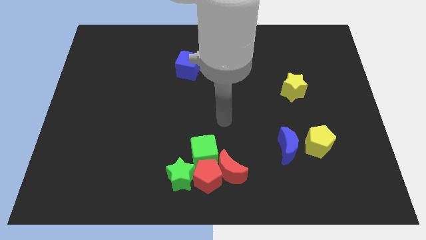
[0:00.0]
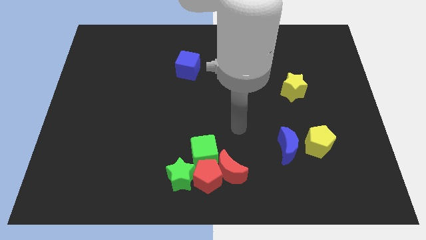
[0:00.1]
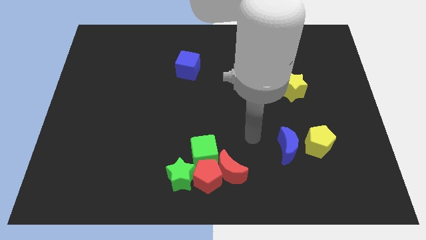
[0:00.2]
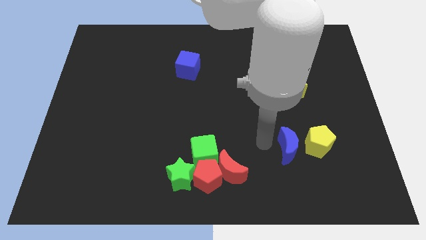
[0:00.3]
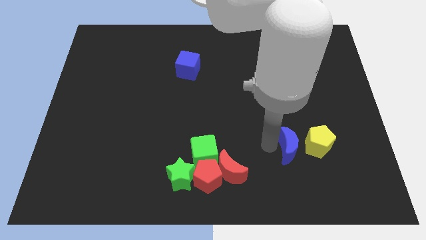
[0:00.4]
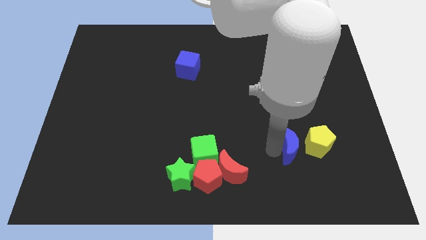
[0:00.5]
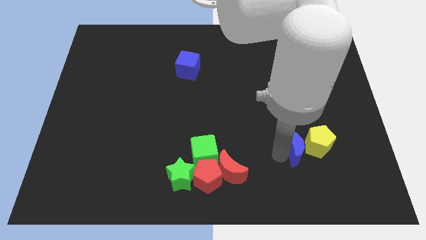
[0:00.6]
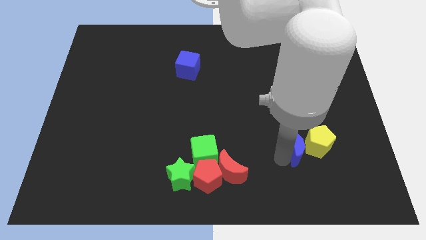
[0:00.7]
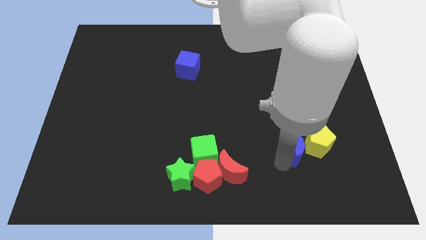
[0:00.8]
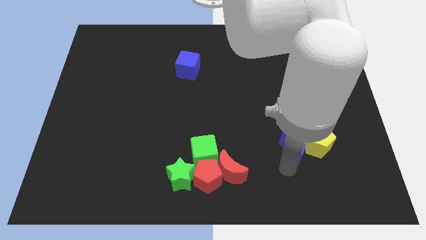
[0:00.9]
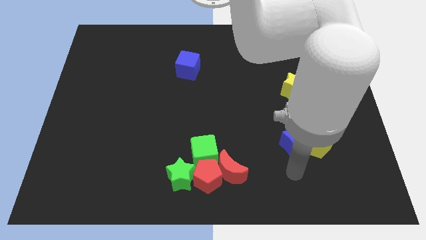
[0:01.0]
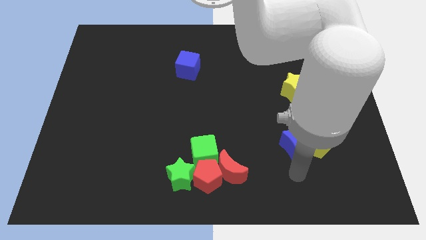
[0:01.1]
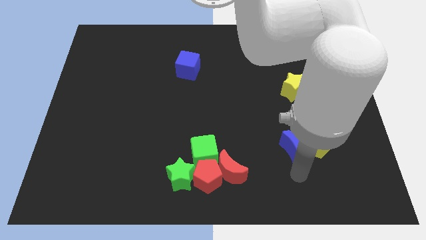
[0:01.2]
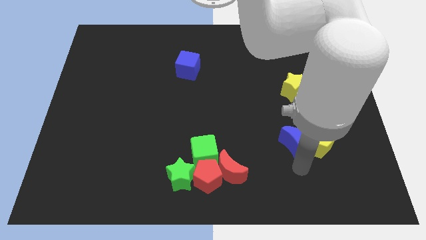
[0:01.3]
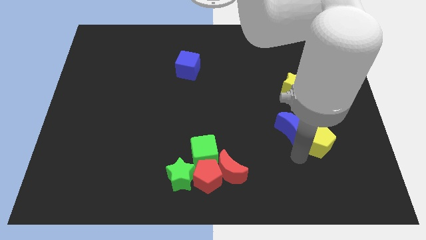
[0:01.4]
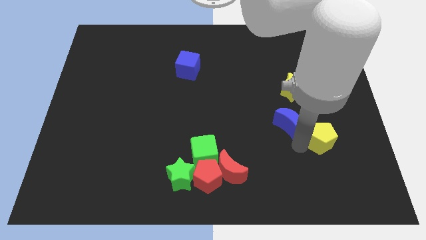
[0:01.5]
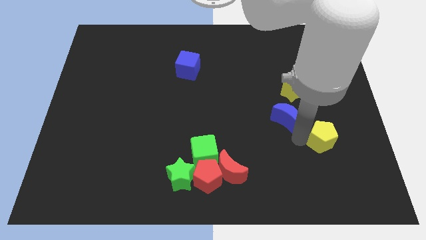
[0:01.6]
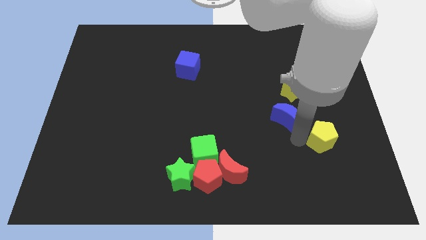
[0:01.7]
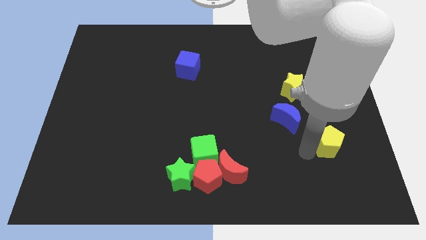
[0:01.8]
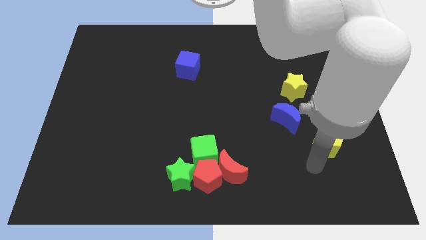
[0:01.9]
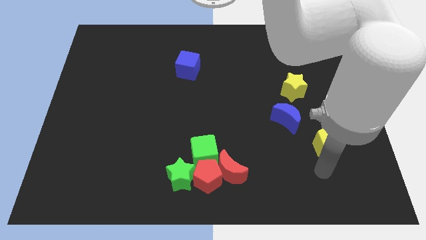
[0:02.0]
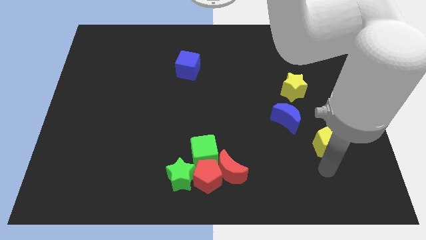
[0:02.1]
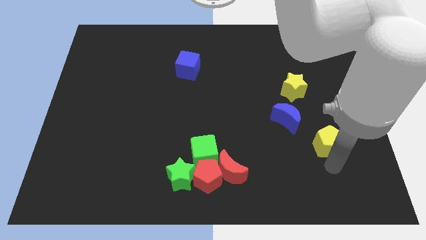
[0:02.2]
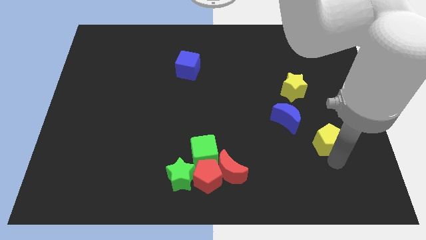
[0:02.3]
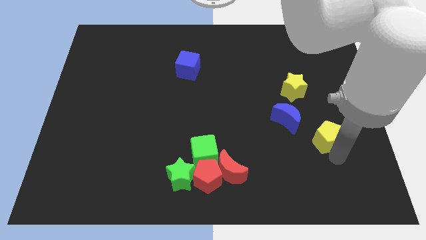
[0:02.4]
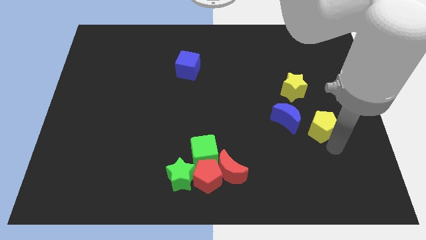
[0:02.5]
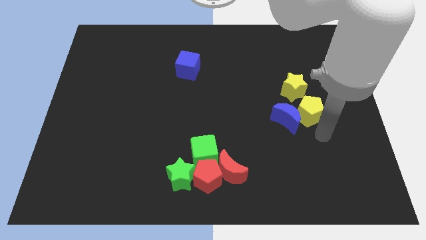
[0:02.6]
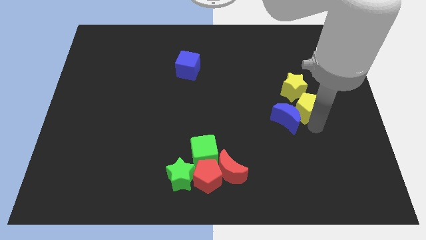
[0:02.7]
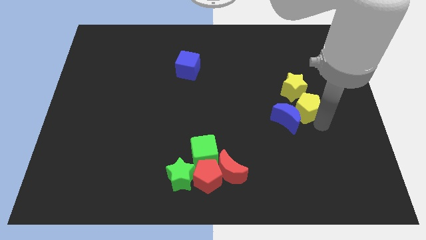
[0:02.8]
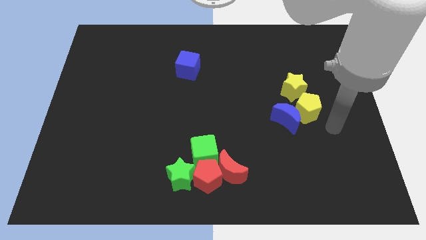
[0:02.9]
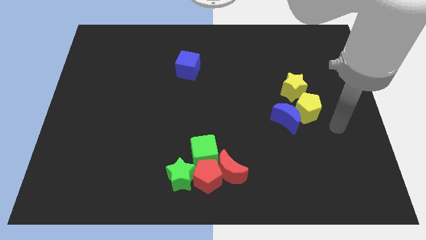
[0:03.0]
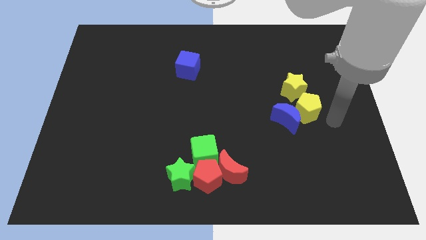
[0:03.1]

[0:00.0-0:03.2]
make a group of both yellow blocks and blue crescent at the top right side of the red crescent

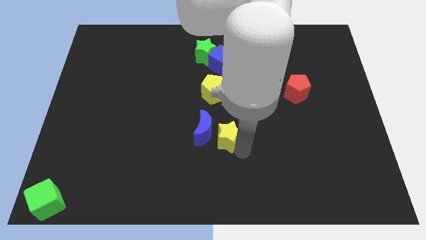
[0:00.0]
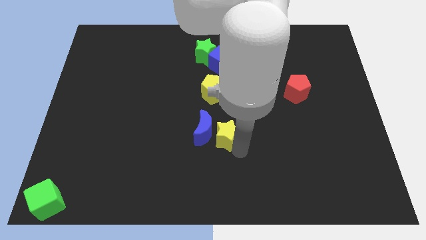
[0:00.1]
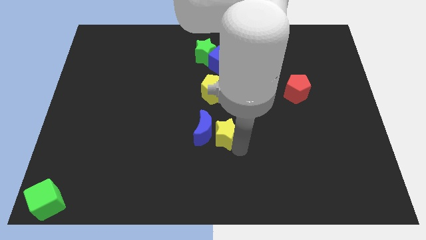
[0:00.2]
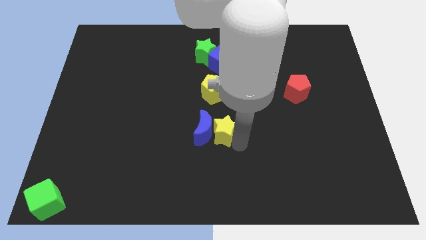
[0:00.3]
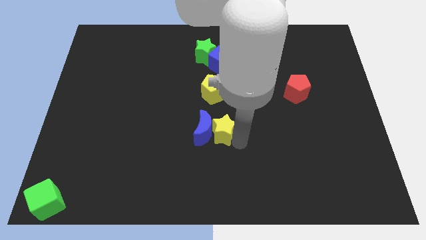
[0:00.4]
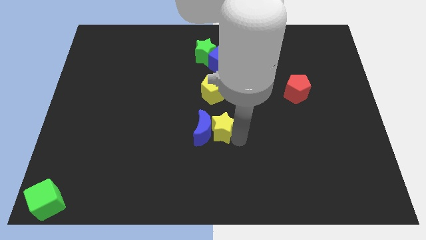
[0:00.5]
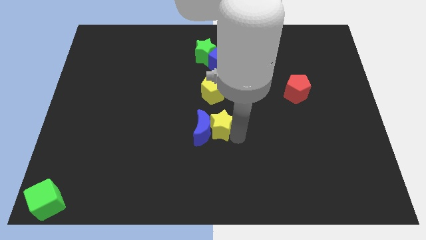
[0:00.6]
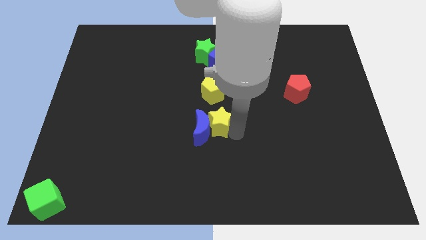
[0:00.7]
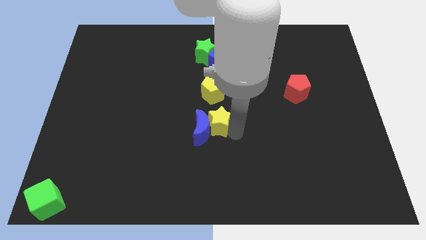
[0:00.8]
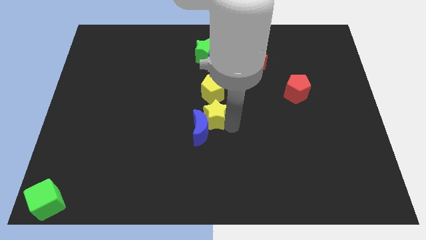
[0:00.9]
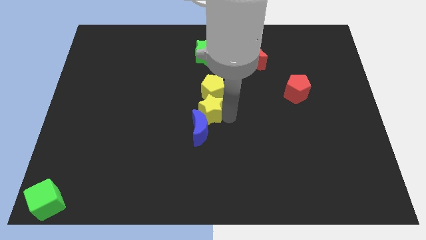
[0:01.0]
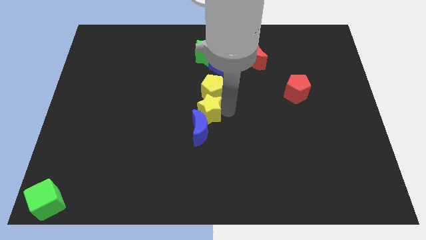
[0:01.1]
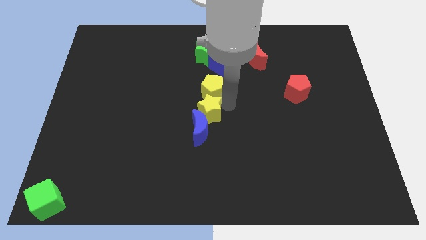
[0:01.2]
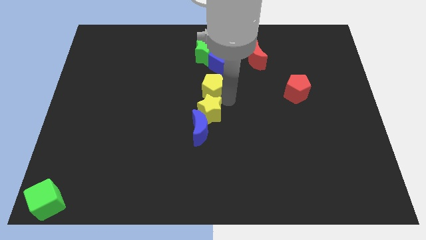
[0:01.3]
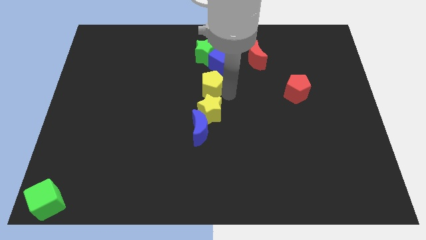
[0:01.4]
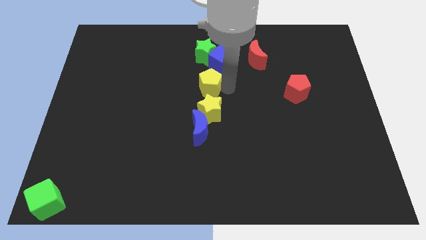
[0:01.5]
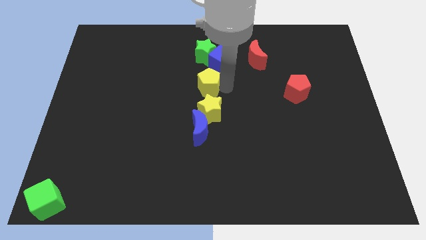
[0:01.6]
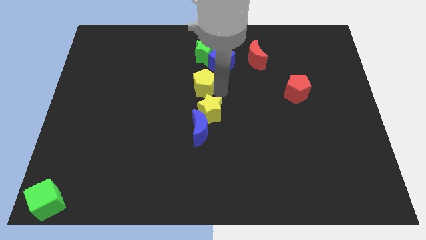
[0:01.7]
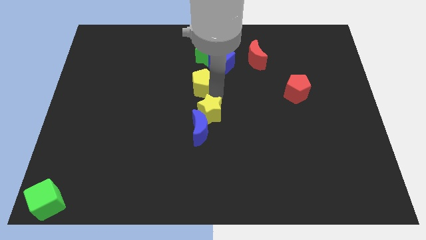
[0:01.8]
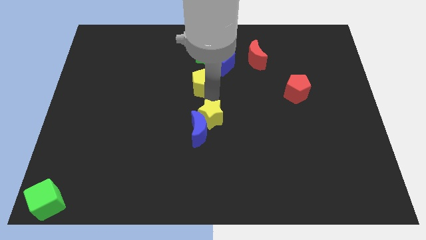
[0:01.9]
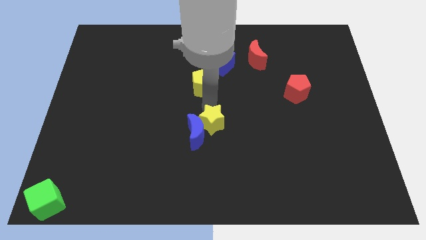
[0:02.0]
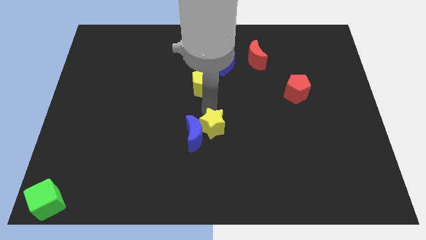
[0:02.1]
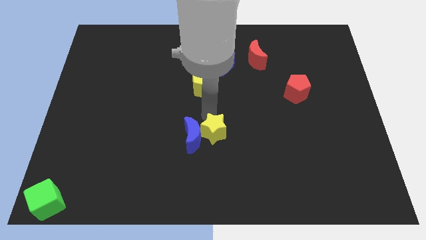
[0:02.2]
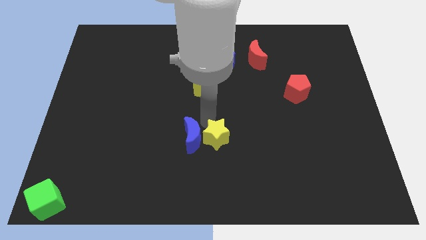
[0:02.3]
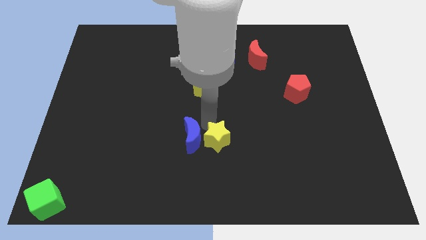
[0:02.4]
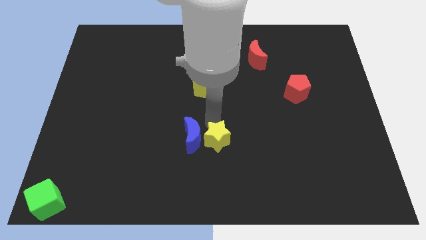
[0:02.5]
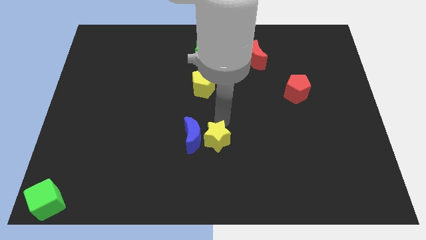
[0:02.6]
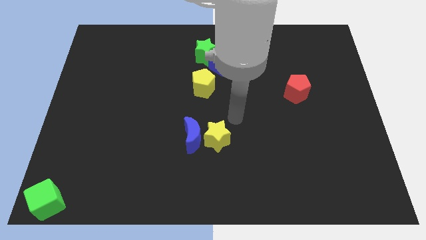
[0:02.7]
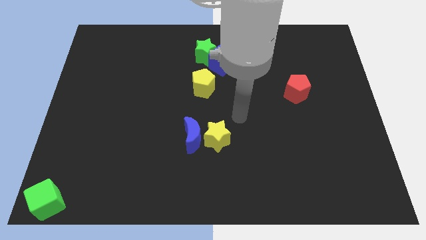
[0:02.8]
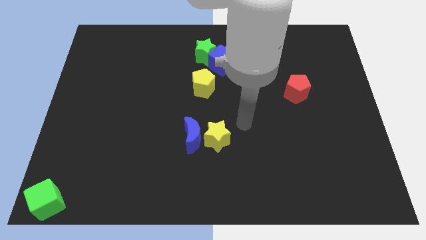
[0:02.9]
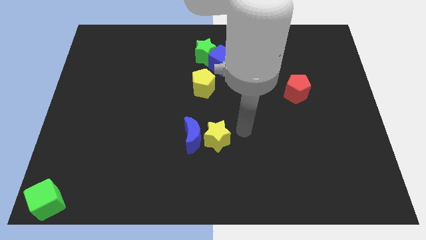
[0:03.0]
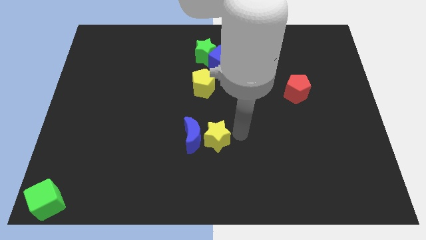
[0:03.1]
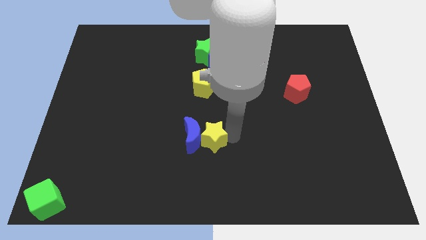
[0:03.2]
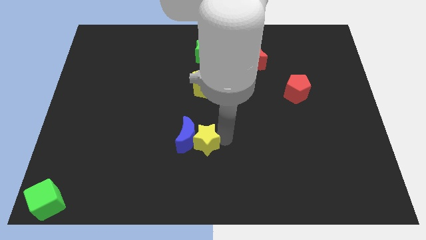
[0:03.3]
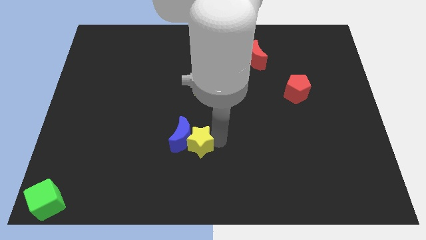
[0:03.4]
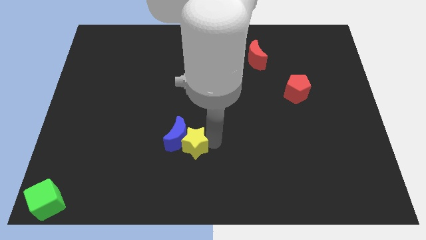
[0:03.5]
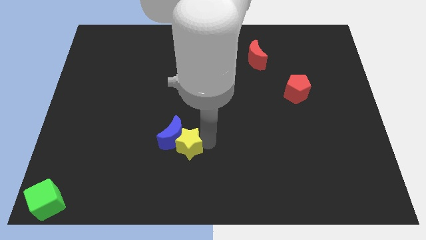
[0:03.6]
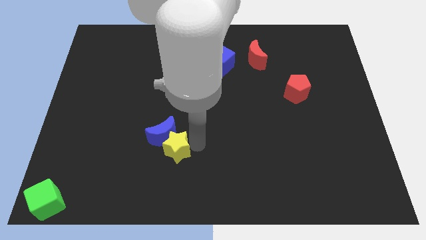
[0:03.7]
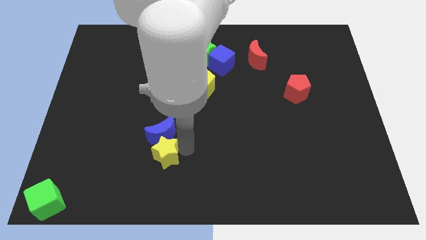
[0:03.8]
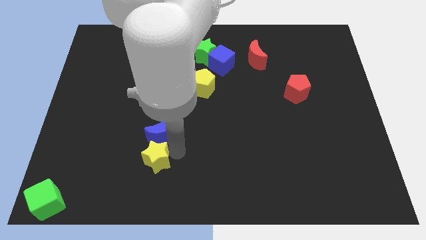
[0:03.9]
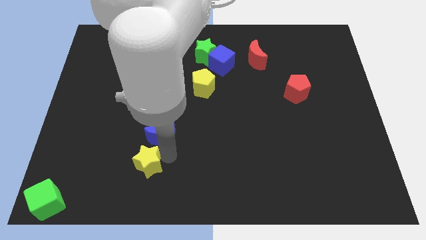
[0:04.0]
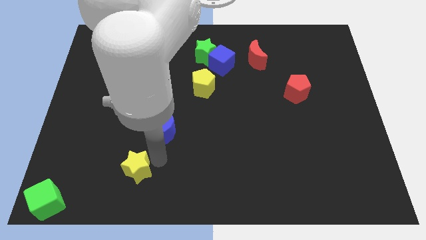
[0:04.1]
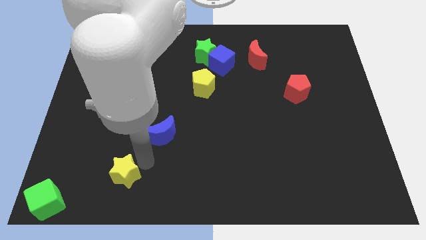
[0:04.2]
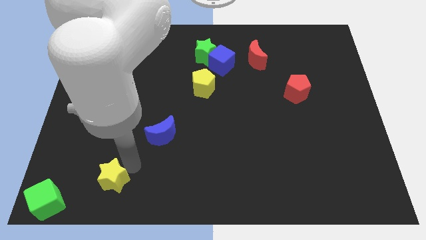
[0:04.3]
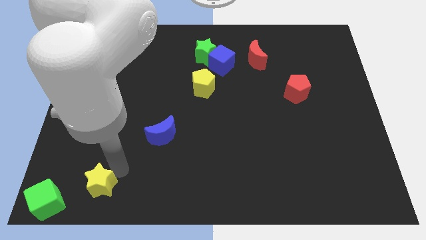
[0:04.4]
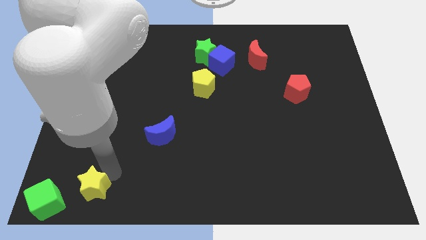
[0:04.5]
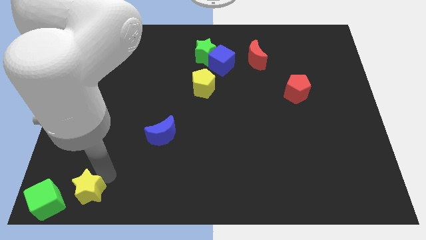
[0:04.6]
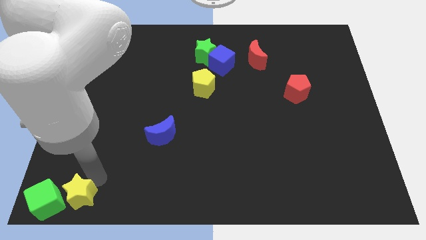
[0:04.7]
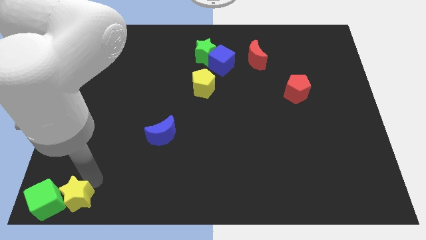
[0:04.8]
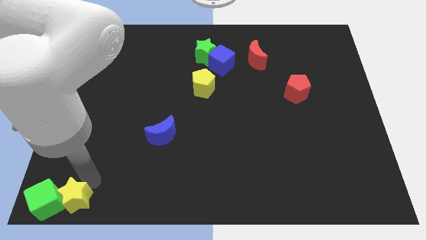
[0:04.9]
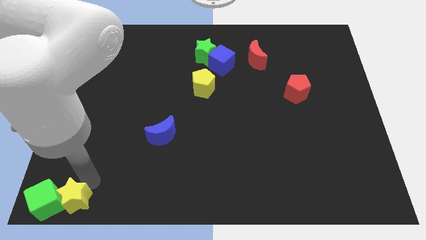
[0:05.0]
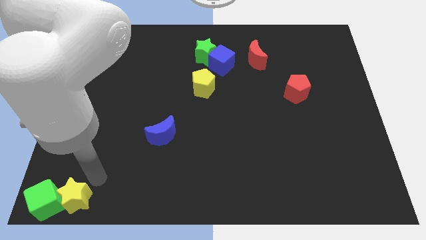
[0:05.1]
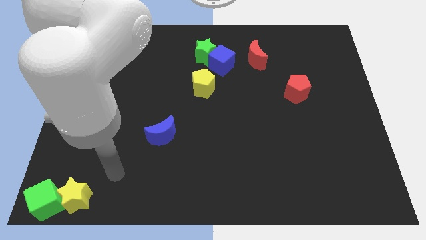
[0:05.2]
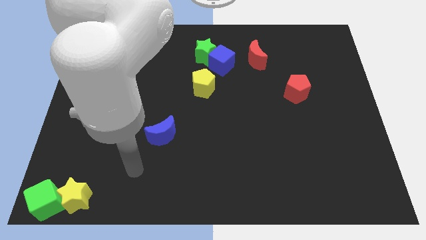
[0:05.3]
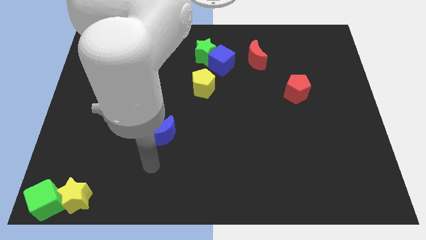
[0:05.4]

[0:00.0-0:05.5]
slide the yellow star to the bottom left corner

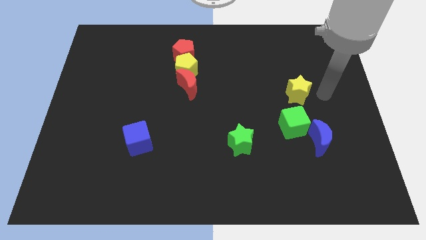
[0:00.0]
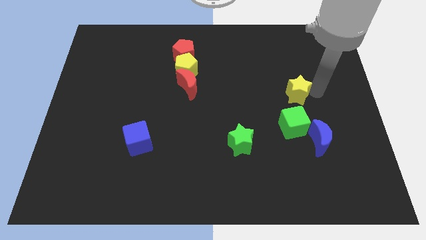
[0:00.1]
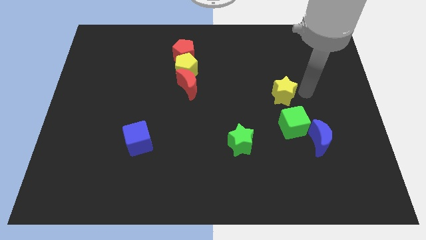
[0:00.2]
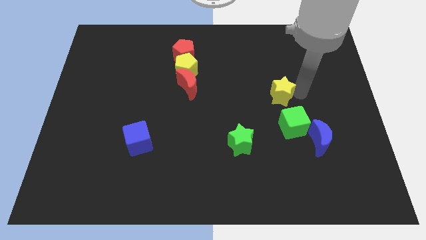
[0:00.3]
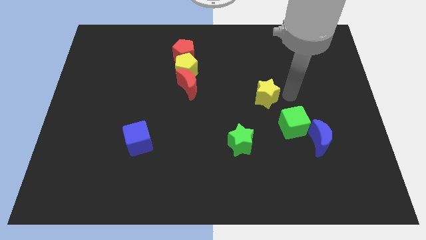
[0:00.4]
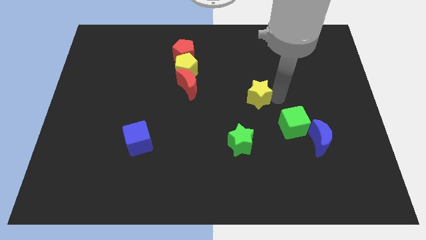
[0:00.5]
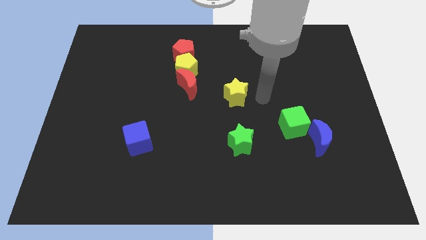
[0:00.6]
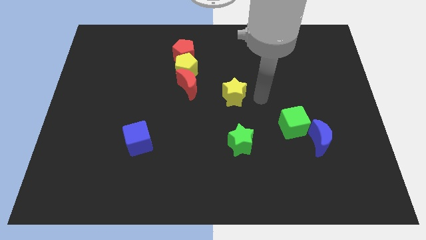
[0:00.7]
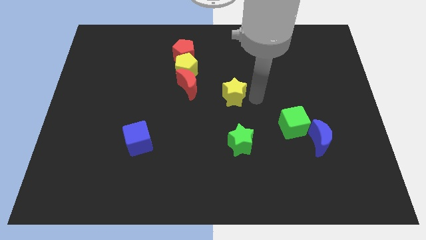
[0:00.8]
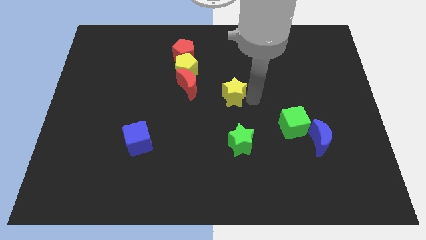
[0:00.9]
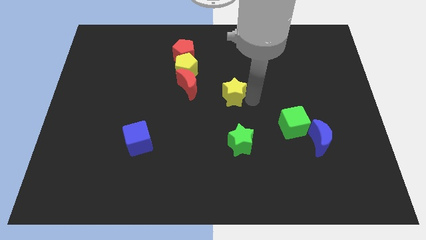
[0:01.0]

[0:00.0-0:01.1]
push yellow star above green star
